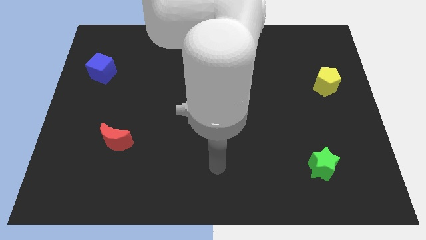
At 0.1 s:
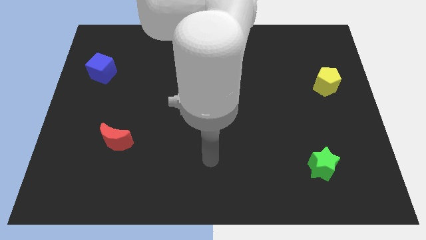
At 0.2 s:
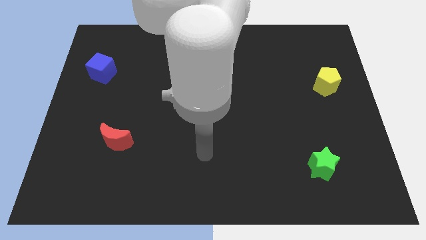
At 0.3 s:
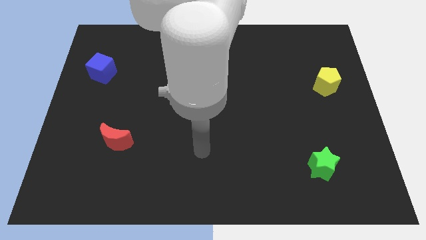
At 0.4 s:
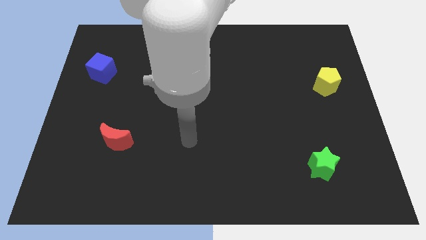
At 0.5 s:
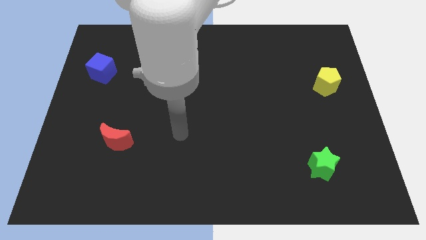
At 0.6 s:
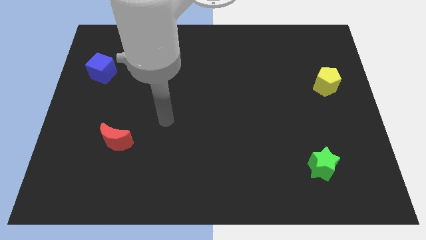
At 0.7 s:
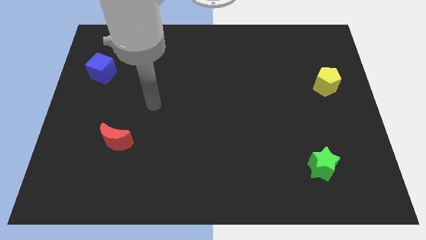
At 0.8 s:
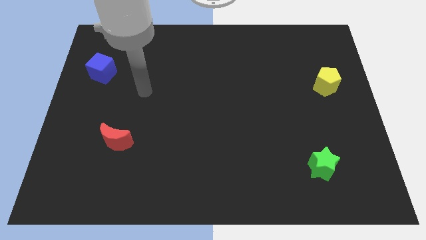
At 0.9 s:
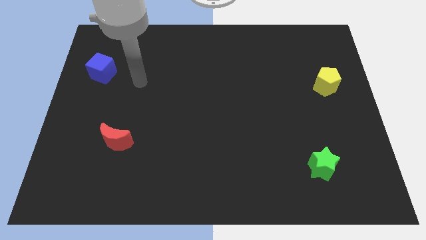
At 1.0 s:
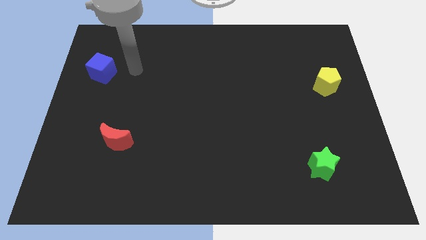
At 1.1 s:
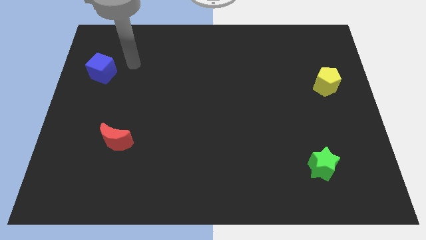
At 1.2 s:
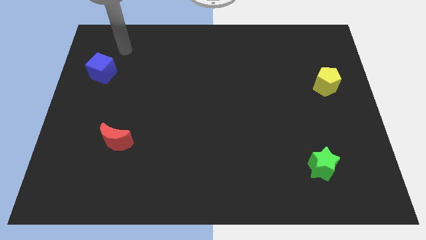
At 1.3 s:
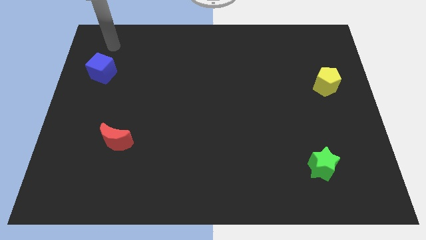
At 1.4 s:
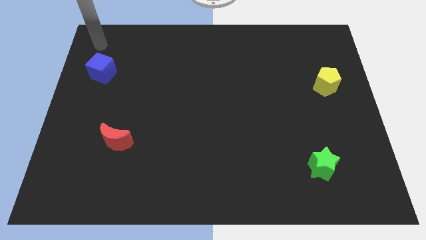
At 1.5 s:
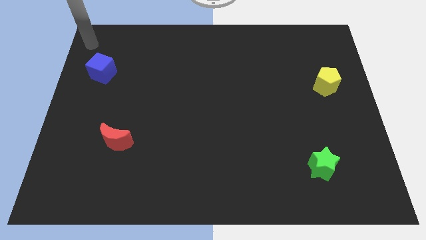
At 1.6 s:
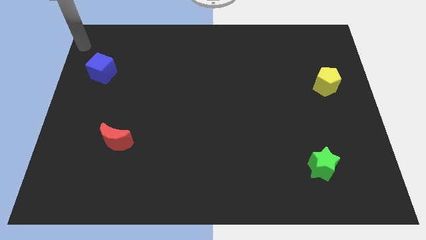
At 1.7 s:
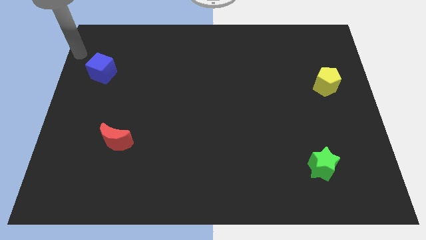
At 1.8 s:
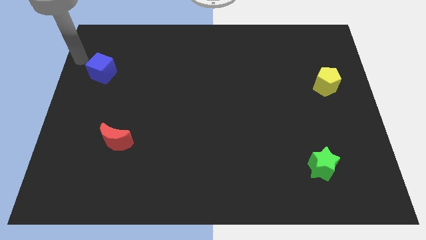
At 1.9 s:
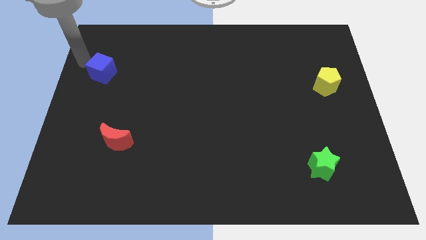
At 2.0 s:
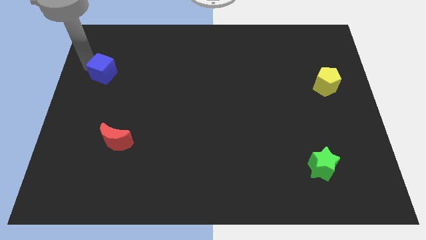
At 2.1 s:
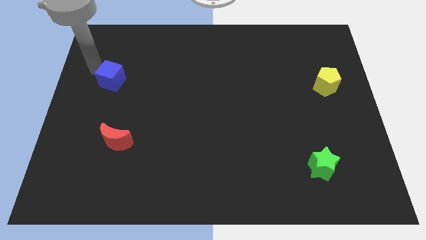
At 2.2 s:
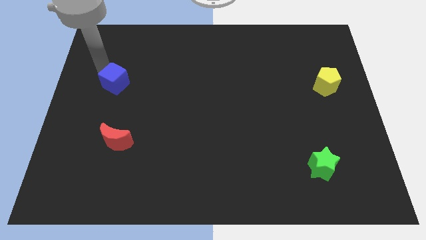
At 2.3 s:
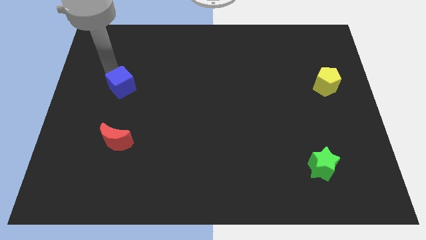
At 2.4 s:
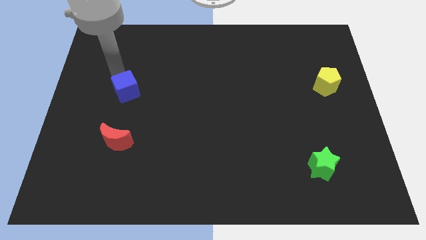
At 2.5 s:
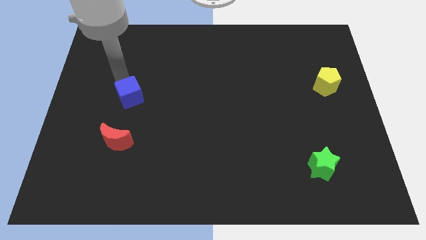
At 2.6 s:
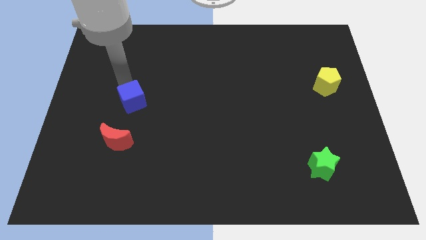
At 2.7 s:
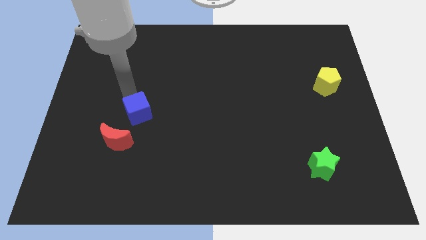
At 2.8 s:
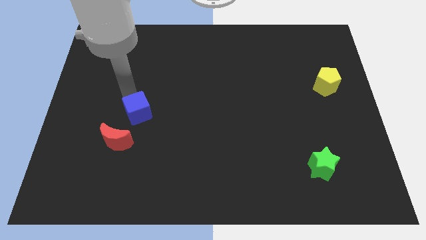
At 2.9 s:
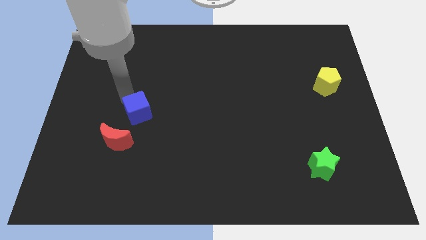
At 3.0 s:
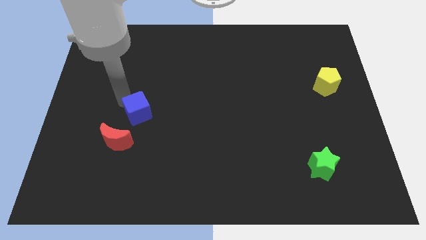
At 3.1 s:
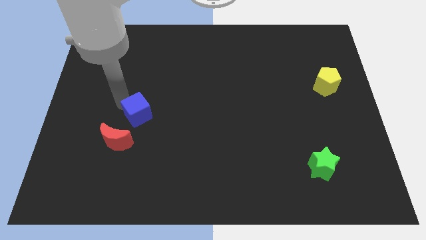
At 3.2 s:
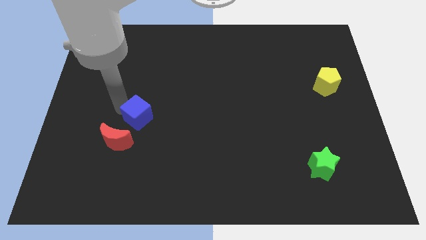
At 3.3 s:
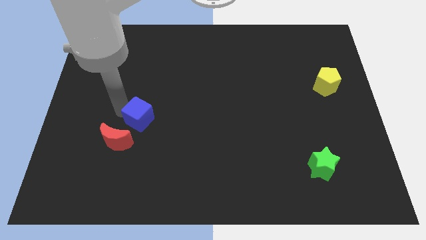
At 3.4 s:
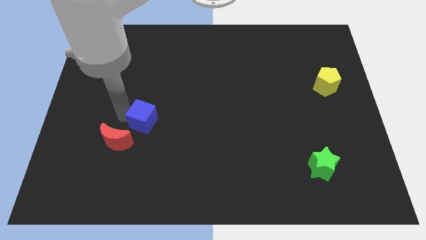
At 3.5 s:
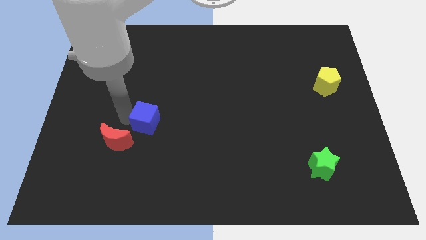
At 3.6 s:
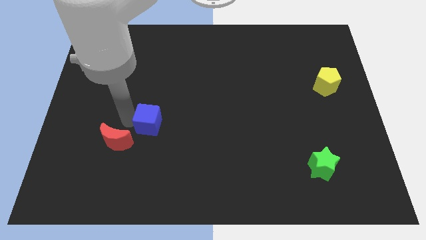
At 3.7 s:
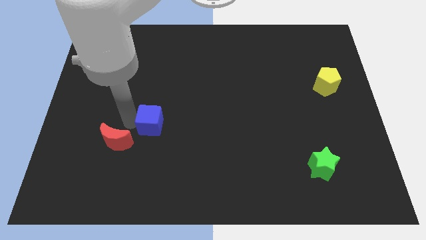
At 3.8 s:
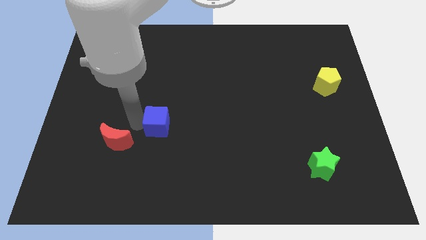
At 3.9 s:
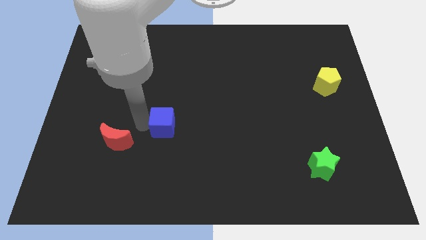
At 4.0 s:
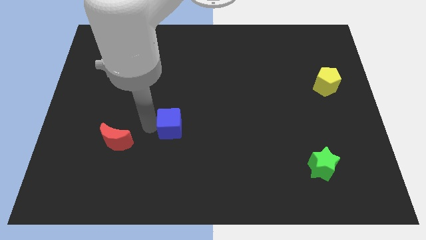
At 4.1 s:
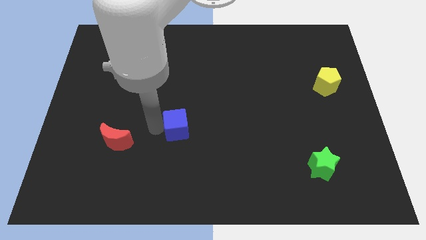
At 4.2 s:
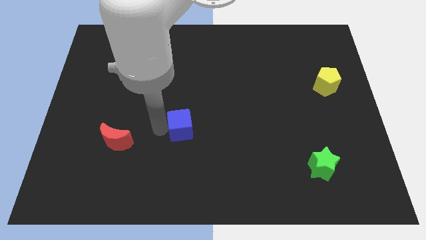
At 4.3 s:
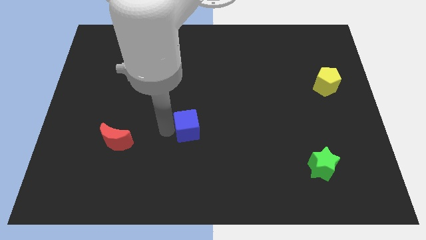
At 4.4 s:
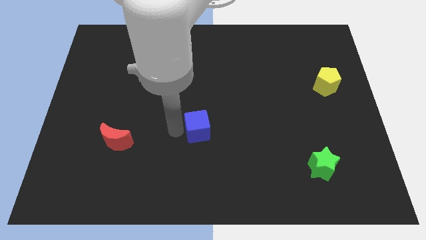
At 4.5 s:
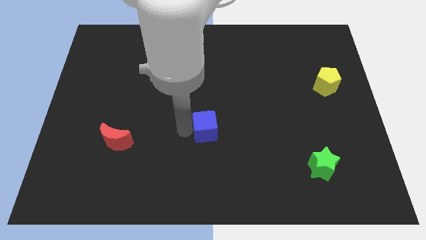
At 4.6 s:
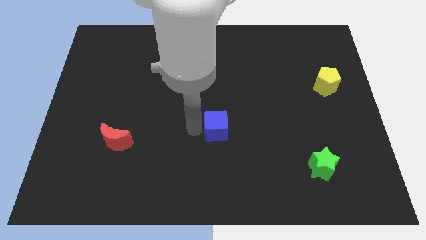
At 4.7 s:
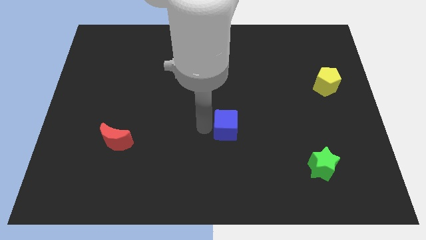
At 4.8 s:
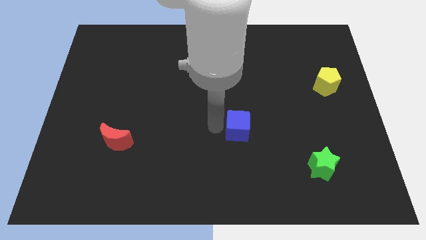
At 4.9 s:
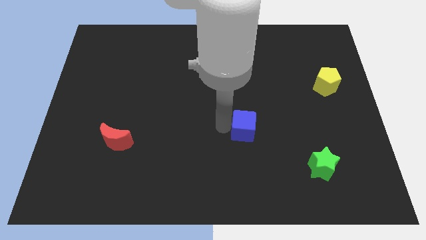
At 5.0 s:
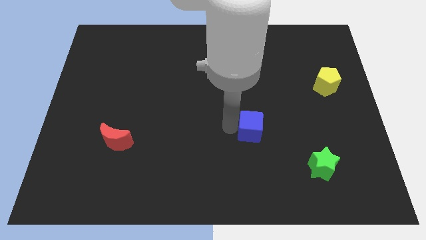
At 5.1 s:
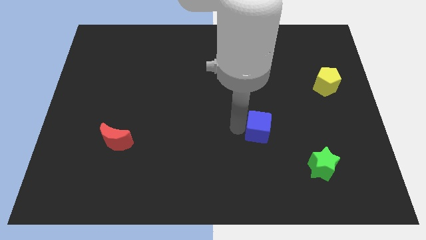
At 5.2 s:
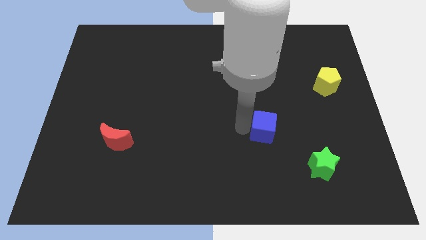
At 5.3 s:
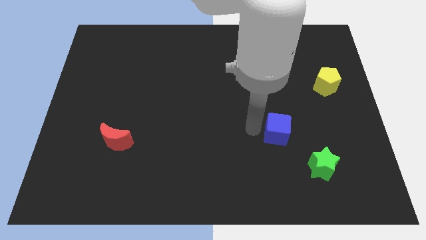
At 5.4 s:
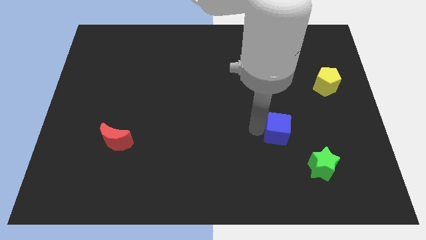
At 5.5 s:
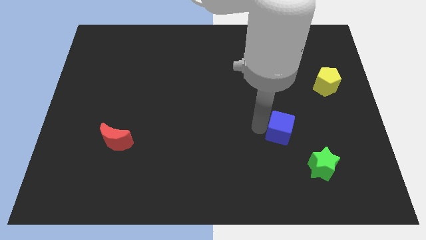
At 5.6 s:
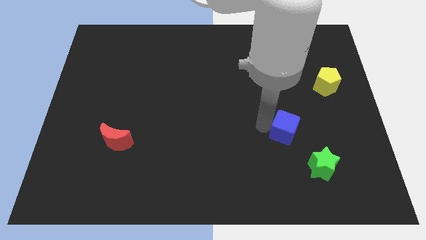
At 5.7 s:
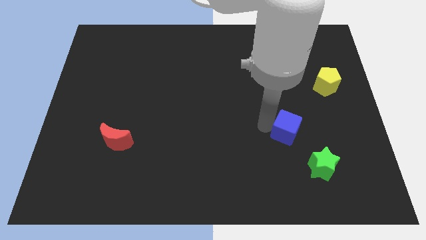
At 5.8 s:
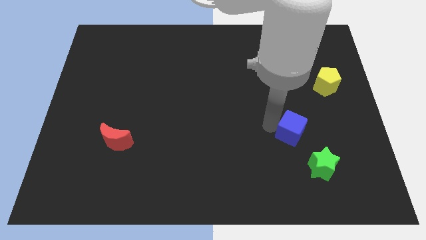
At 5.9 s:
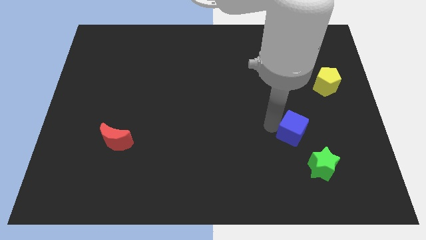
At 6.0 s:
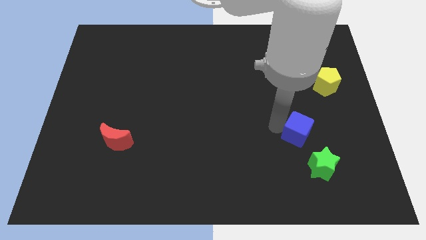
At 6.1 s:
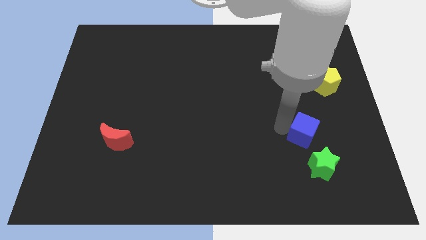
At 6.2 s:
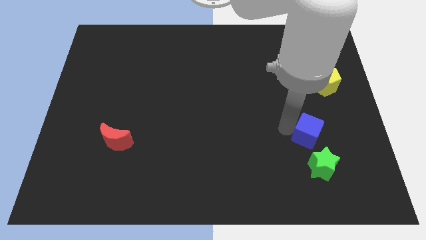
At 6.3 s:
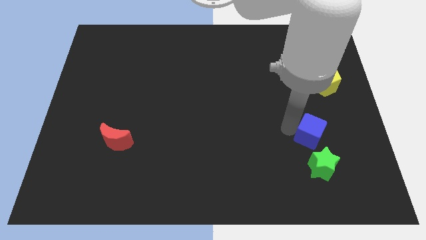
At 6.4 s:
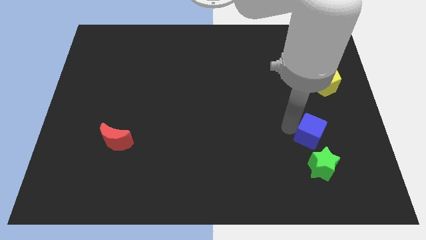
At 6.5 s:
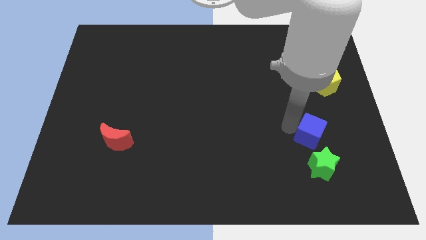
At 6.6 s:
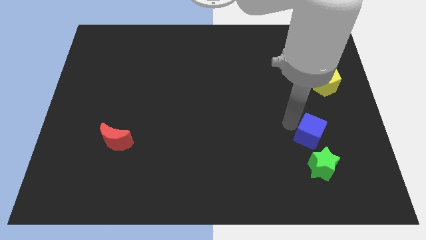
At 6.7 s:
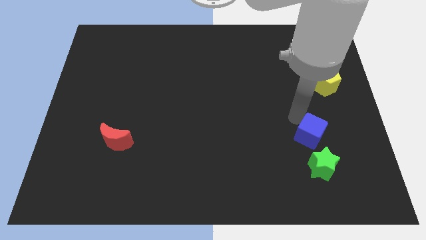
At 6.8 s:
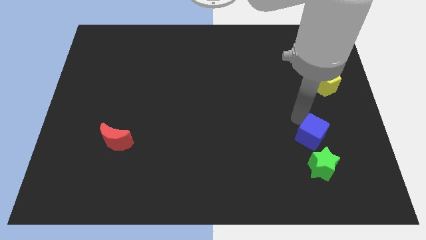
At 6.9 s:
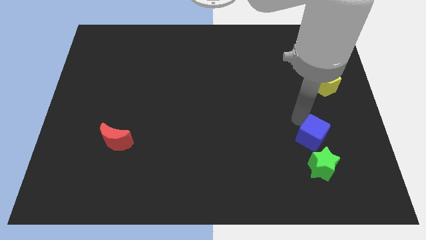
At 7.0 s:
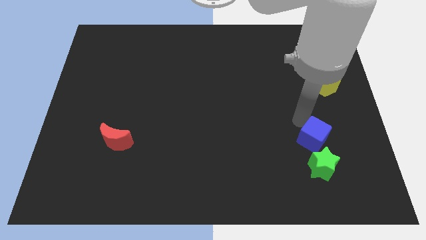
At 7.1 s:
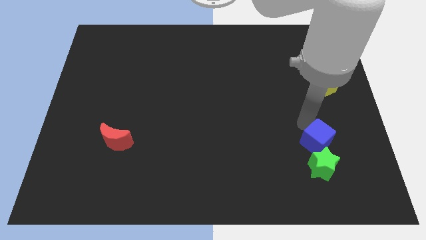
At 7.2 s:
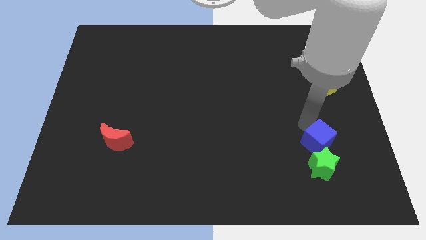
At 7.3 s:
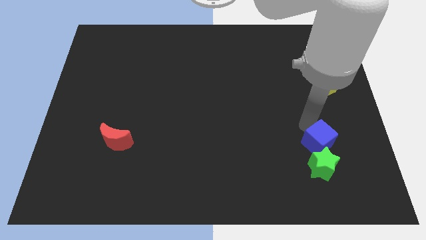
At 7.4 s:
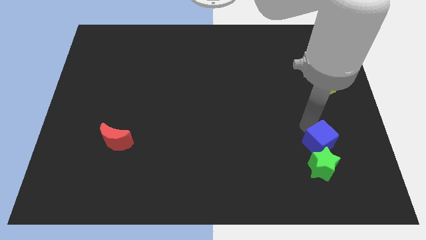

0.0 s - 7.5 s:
push the cube next to the green star

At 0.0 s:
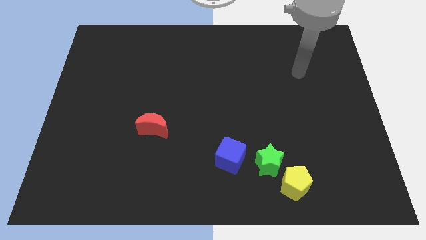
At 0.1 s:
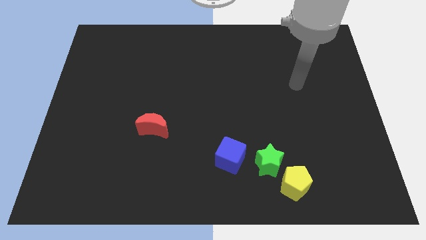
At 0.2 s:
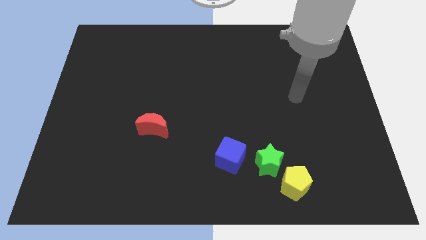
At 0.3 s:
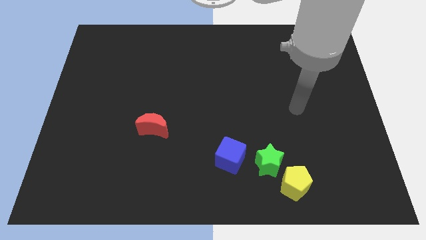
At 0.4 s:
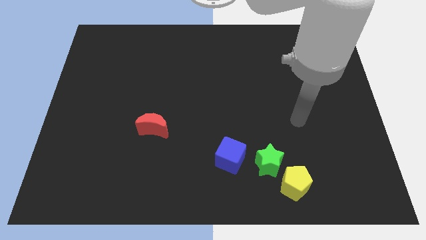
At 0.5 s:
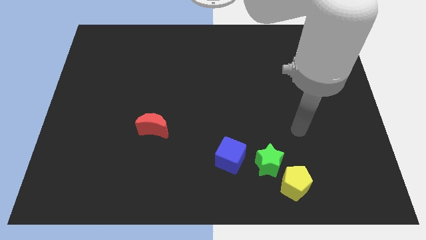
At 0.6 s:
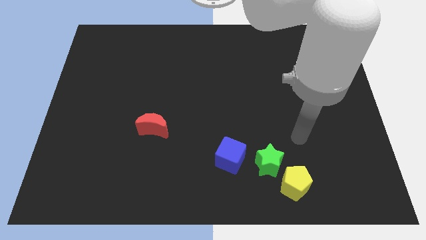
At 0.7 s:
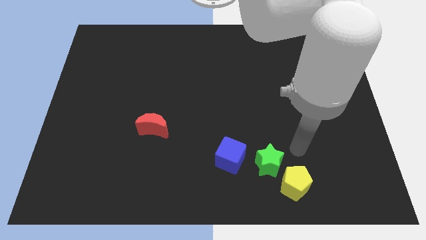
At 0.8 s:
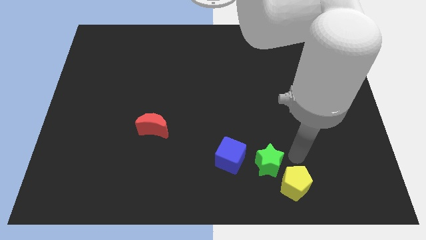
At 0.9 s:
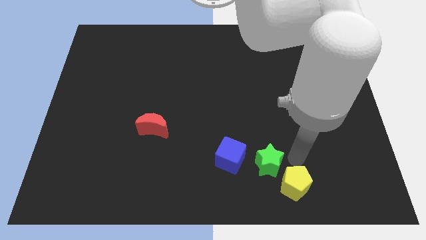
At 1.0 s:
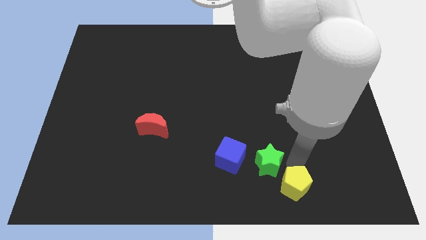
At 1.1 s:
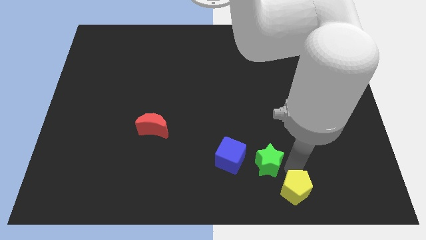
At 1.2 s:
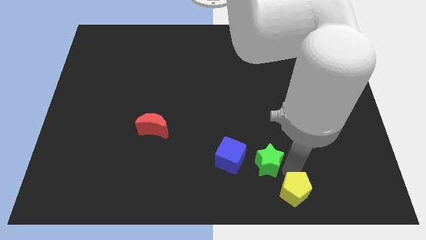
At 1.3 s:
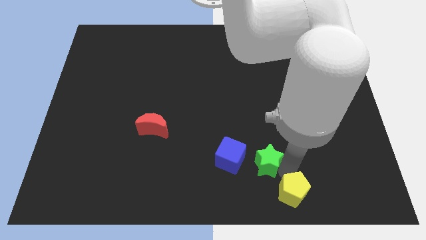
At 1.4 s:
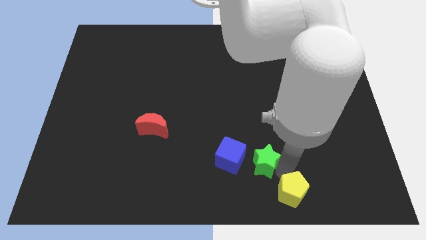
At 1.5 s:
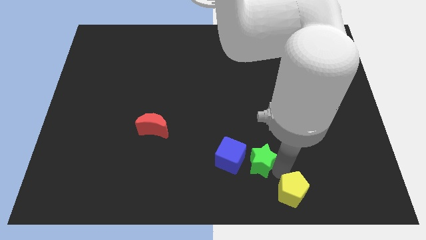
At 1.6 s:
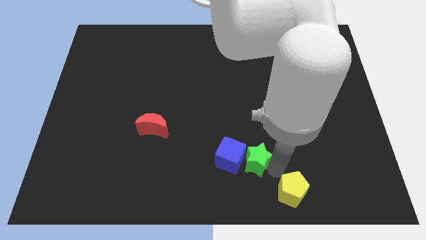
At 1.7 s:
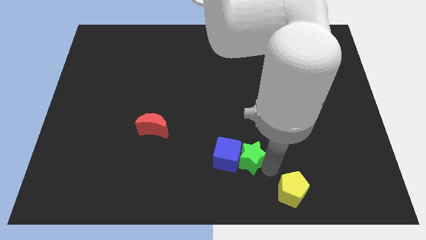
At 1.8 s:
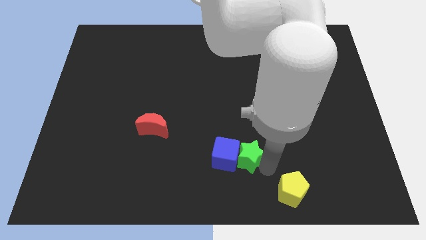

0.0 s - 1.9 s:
move the green star next to the blue cube
